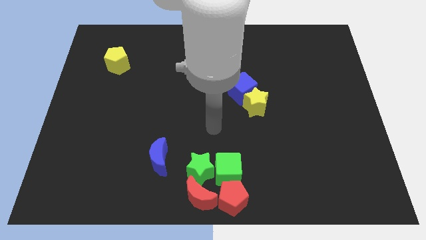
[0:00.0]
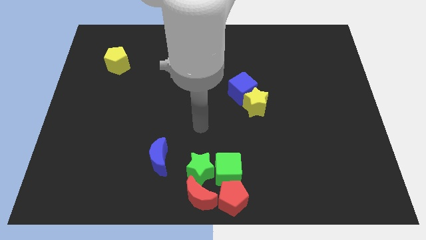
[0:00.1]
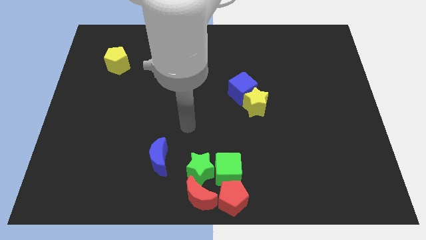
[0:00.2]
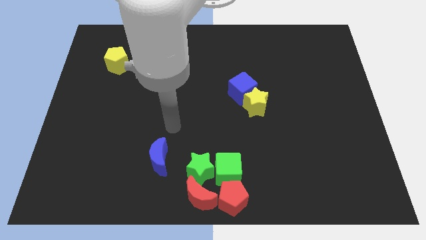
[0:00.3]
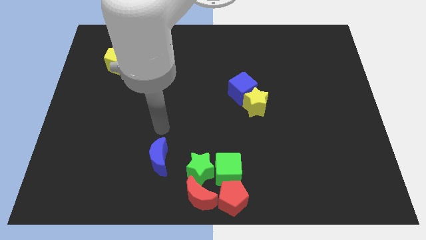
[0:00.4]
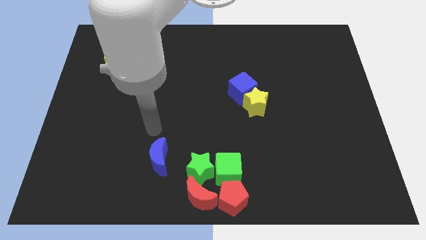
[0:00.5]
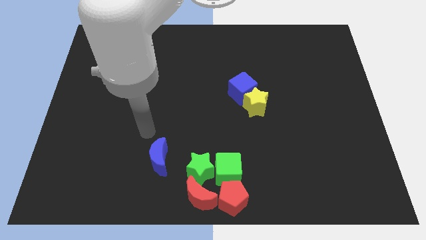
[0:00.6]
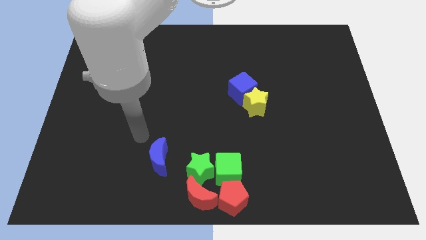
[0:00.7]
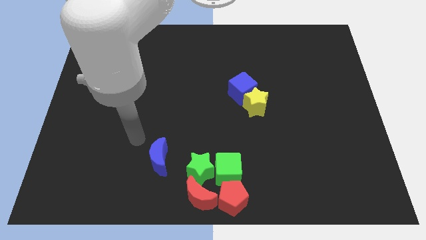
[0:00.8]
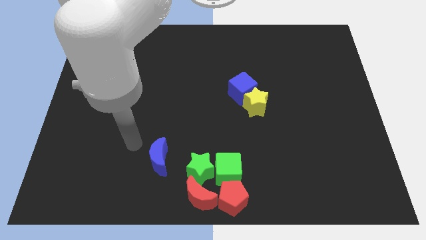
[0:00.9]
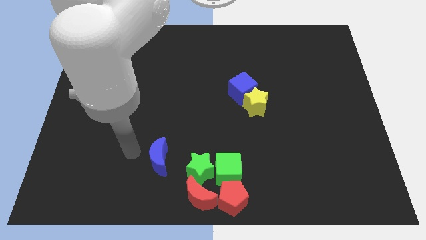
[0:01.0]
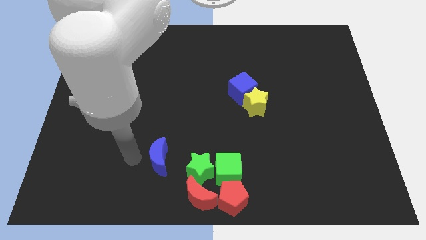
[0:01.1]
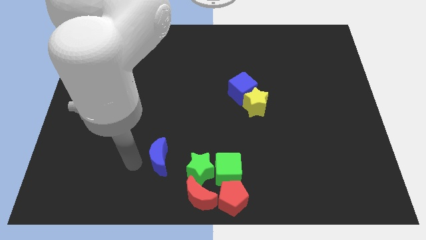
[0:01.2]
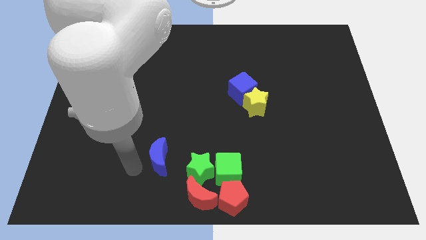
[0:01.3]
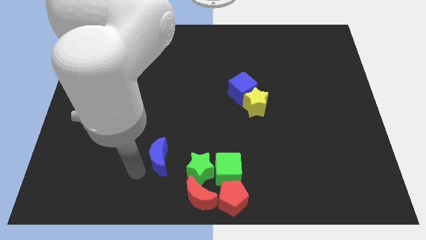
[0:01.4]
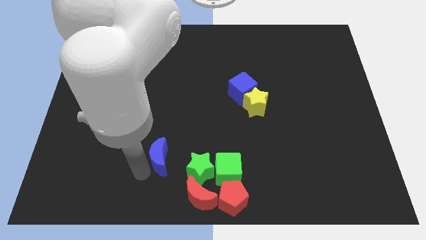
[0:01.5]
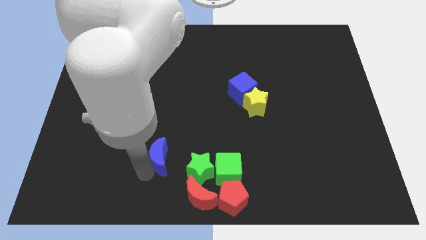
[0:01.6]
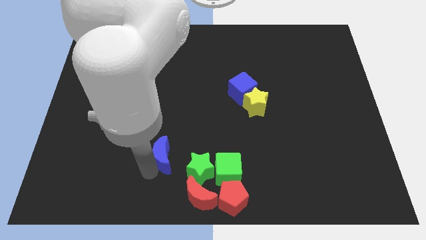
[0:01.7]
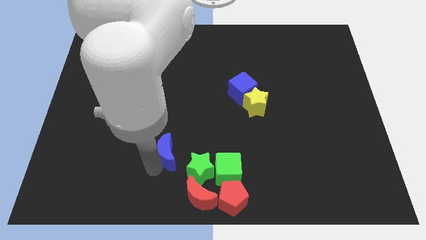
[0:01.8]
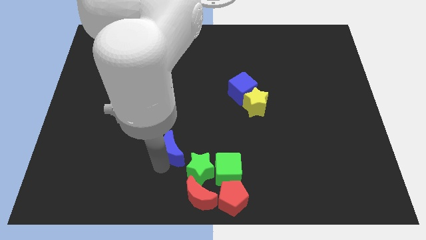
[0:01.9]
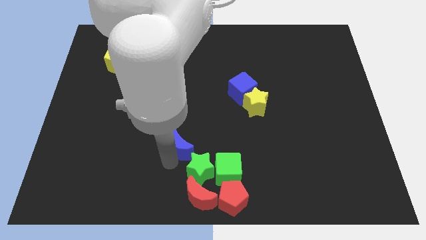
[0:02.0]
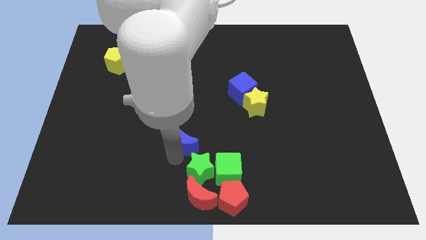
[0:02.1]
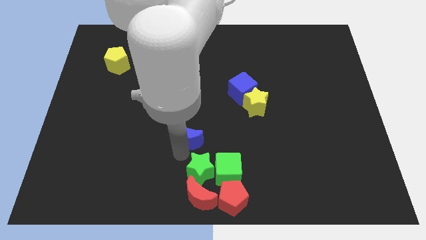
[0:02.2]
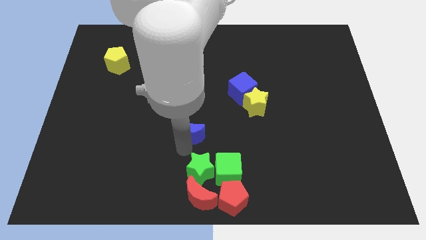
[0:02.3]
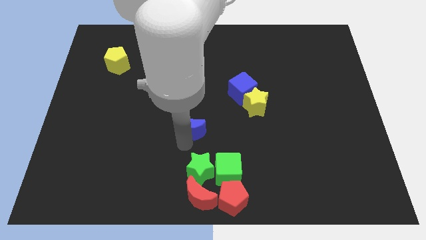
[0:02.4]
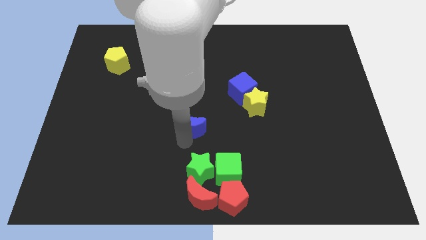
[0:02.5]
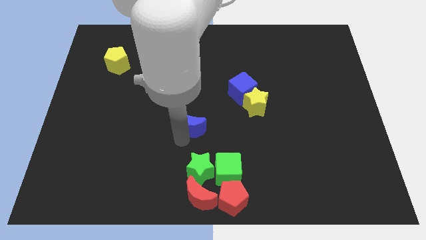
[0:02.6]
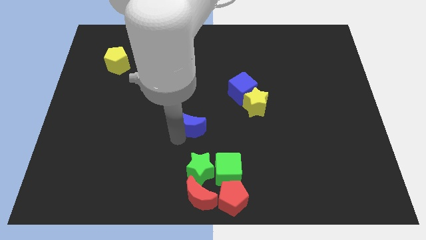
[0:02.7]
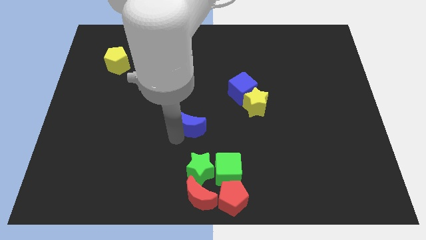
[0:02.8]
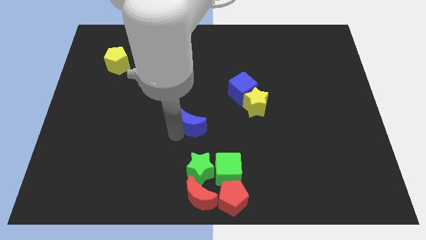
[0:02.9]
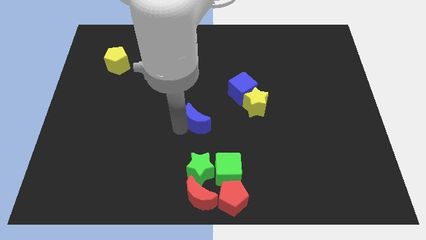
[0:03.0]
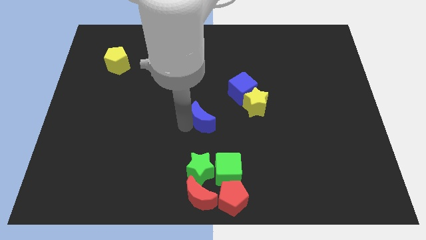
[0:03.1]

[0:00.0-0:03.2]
place the blue moon above the green star

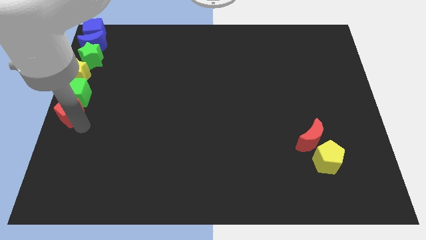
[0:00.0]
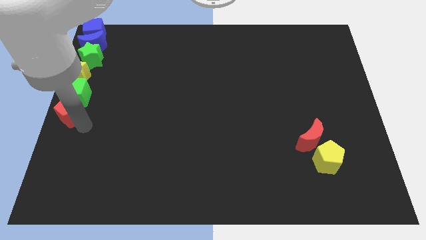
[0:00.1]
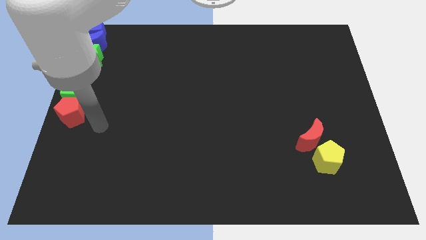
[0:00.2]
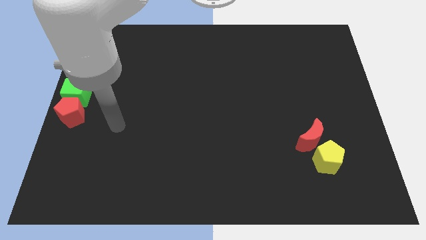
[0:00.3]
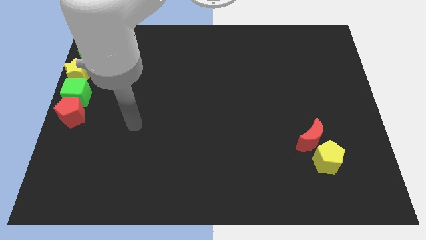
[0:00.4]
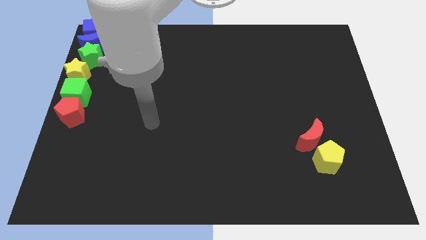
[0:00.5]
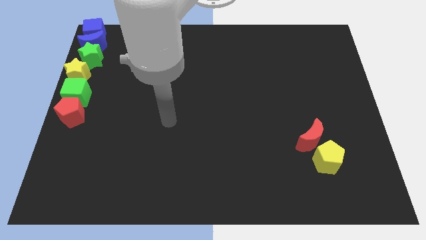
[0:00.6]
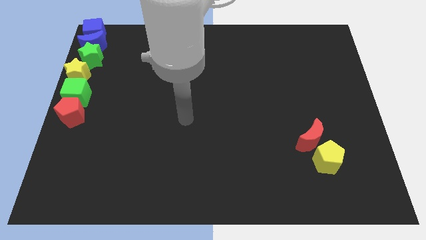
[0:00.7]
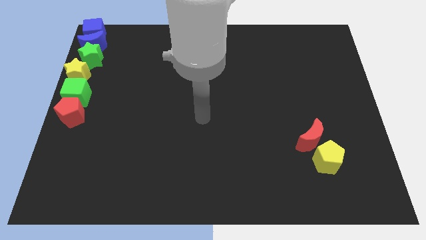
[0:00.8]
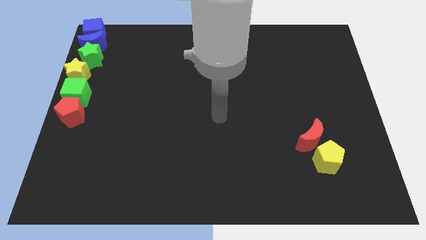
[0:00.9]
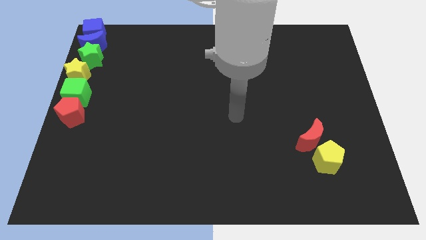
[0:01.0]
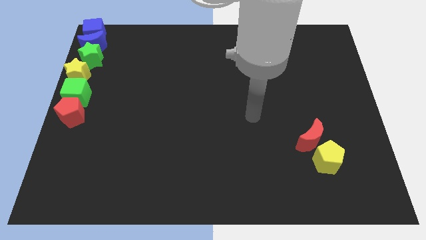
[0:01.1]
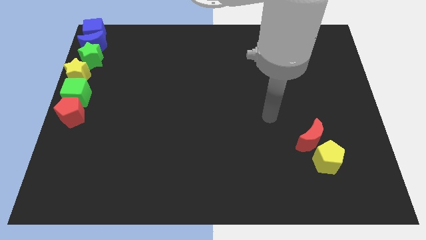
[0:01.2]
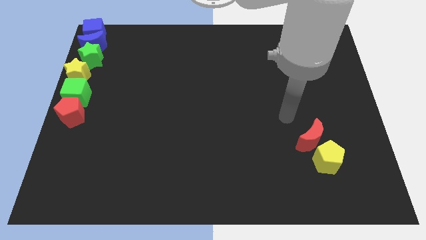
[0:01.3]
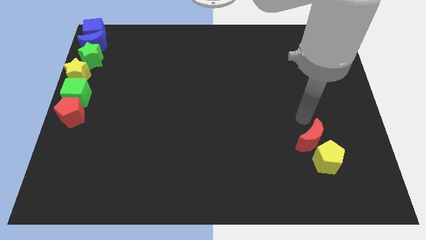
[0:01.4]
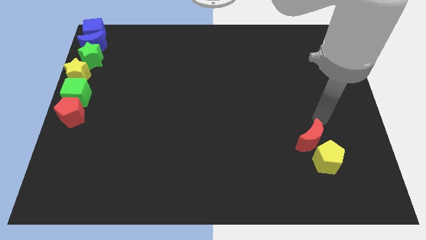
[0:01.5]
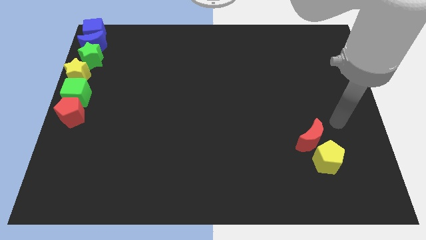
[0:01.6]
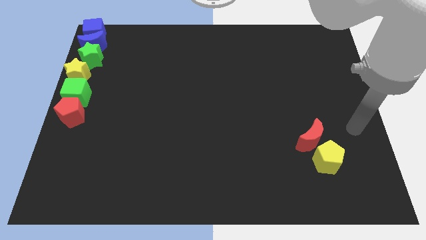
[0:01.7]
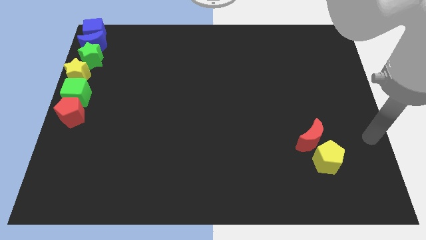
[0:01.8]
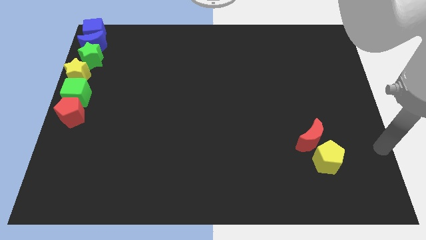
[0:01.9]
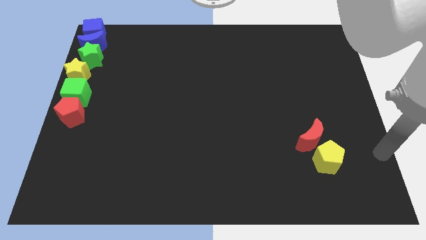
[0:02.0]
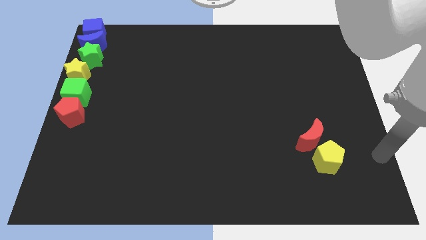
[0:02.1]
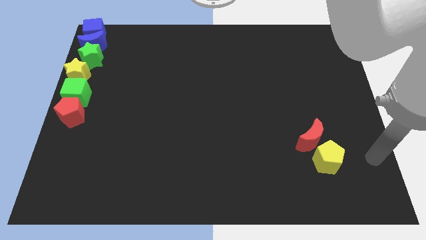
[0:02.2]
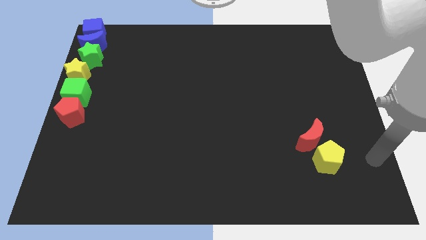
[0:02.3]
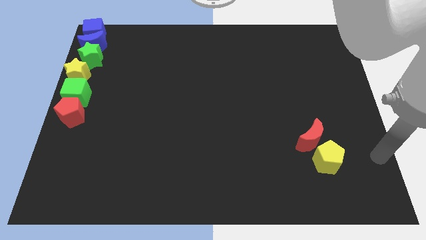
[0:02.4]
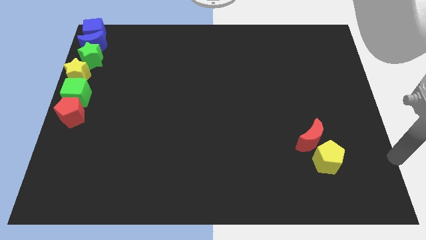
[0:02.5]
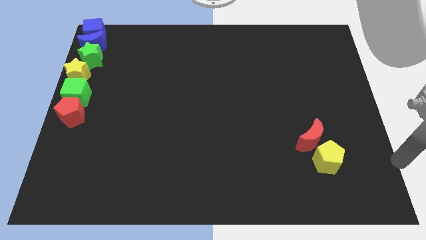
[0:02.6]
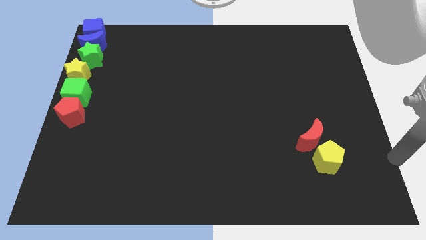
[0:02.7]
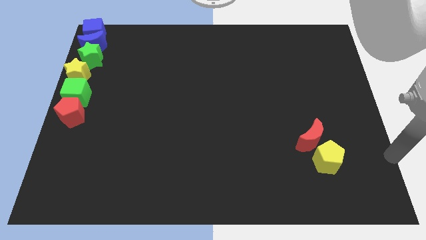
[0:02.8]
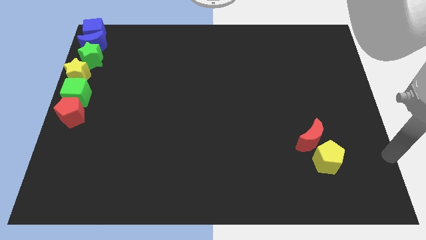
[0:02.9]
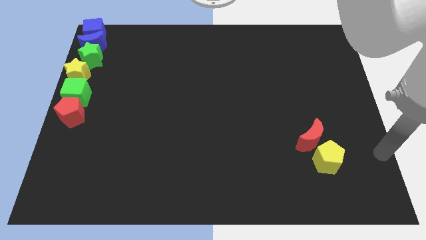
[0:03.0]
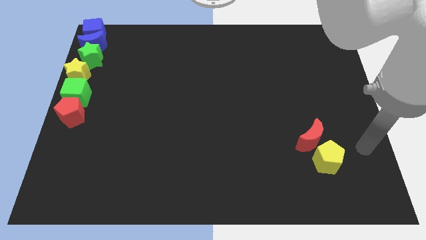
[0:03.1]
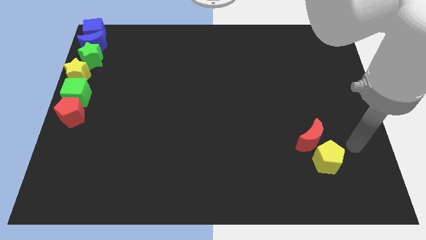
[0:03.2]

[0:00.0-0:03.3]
move your arm away from the red pentagon

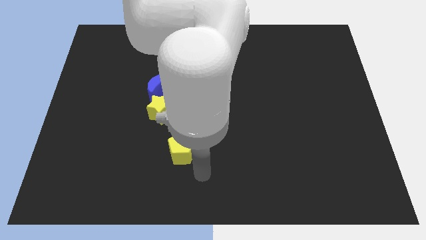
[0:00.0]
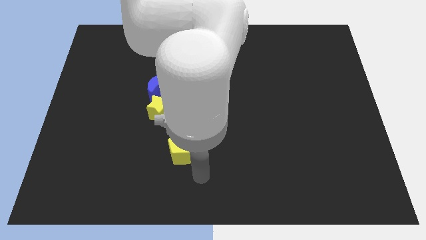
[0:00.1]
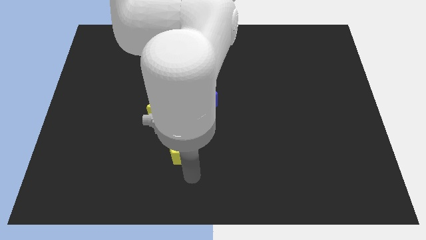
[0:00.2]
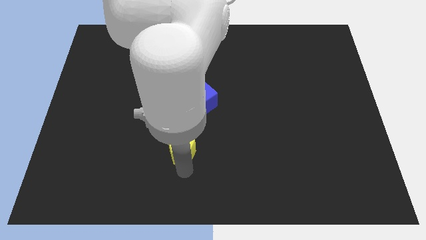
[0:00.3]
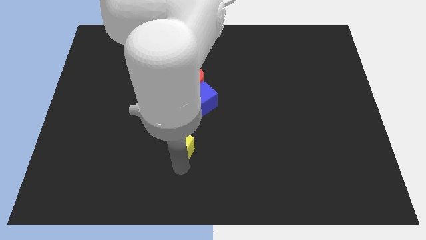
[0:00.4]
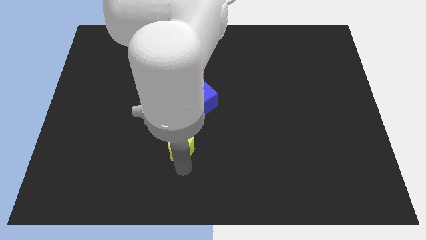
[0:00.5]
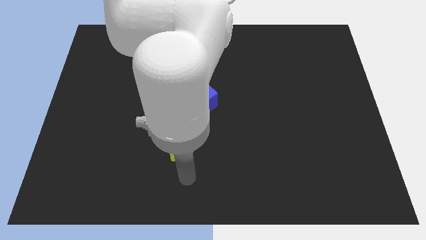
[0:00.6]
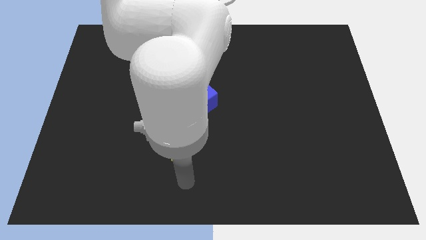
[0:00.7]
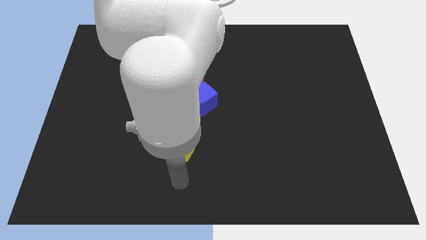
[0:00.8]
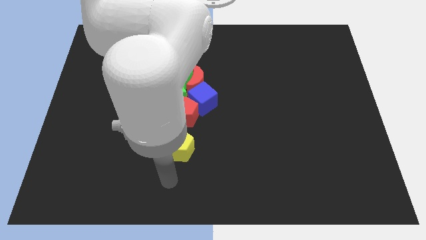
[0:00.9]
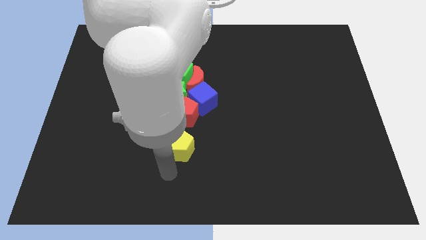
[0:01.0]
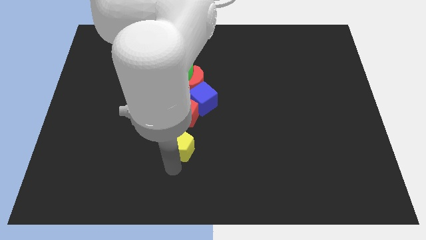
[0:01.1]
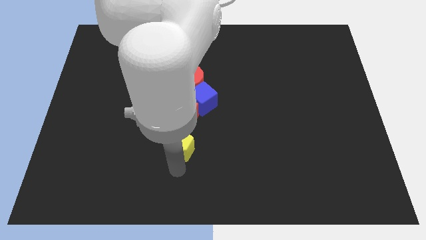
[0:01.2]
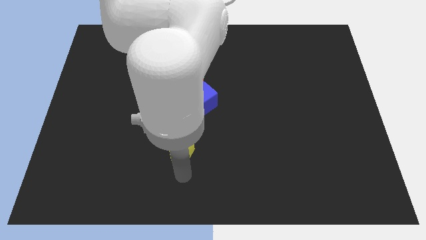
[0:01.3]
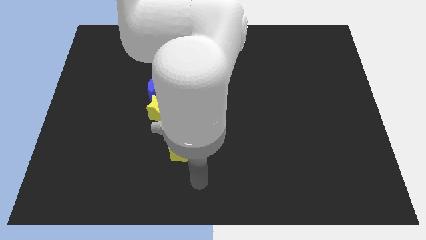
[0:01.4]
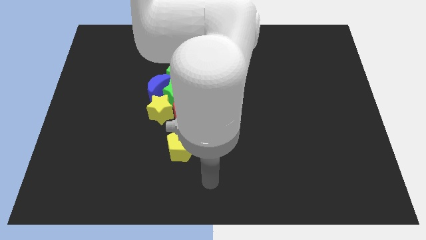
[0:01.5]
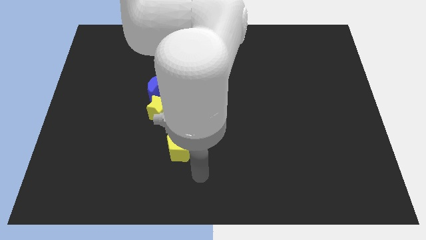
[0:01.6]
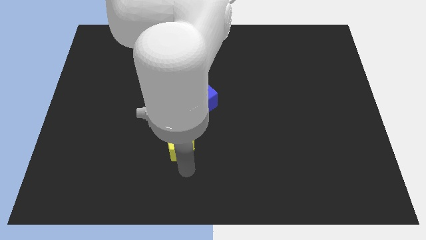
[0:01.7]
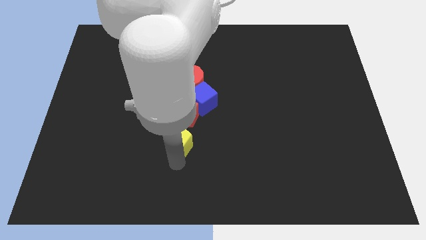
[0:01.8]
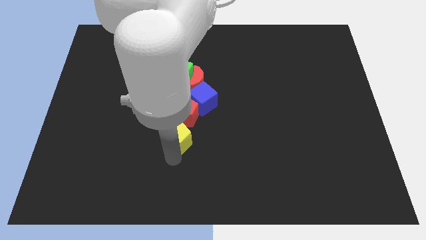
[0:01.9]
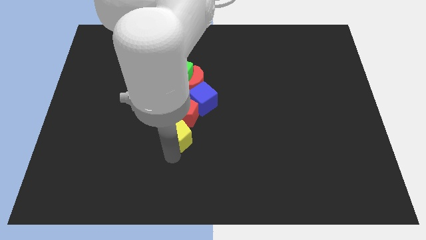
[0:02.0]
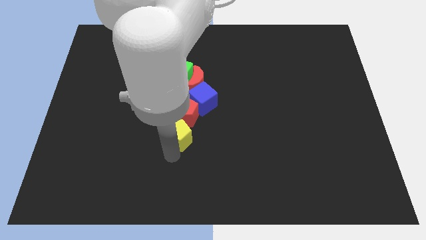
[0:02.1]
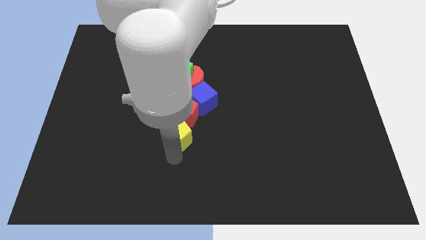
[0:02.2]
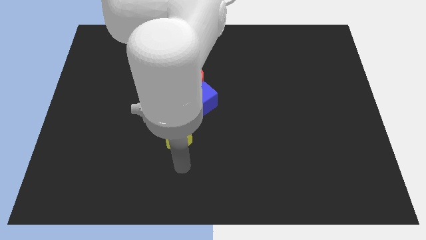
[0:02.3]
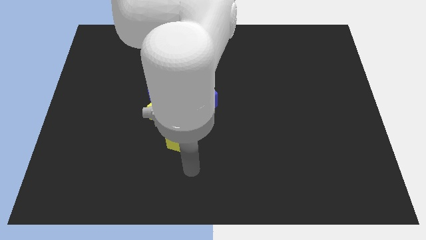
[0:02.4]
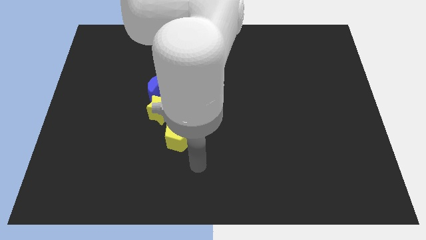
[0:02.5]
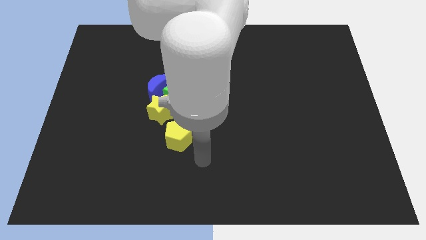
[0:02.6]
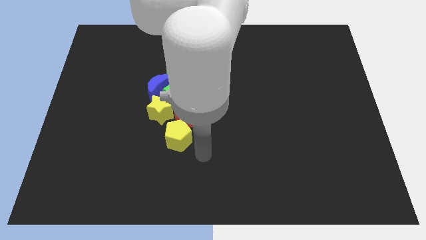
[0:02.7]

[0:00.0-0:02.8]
push the yellow pentagon into red pentagon
